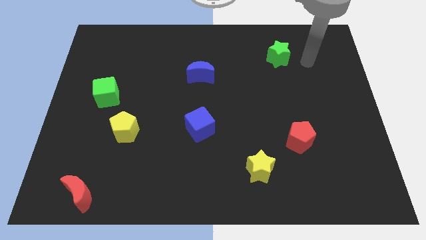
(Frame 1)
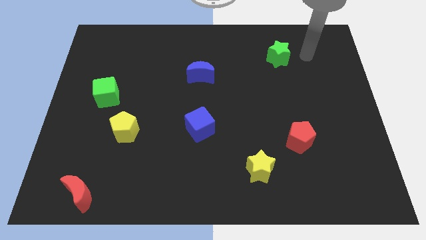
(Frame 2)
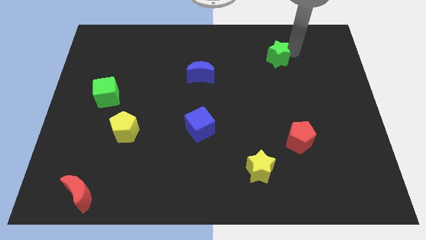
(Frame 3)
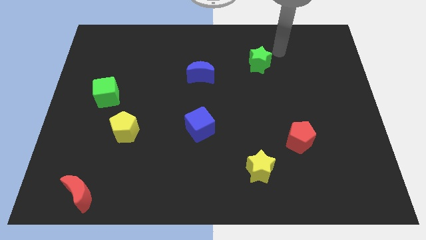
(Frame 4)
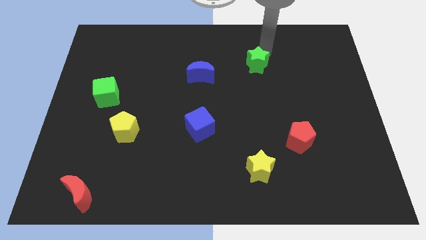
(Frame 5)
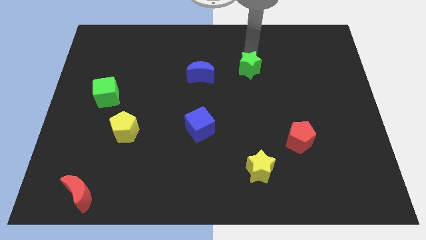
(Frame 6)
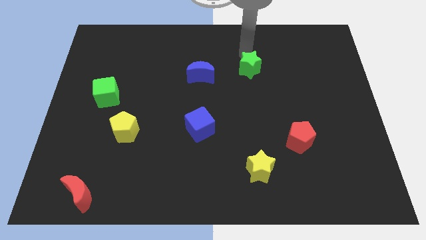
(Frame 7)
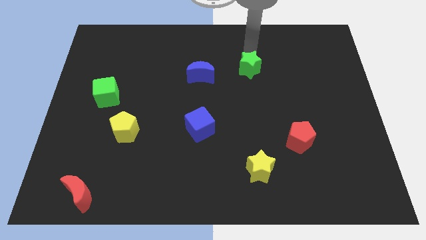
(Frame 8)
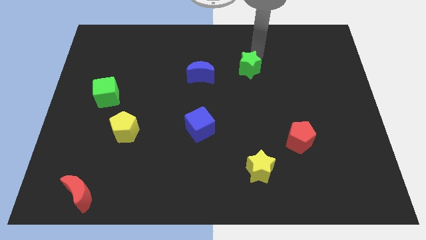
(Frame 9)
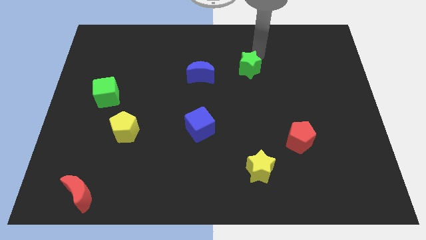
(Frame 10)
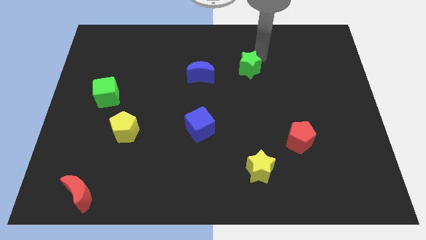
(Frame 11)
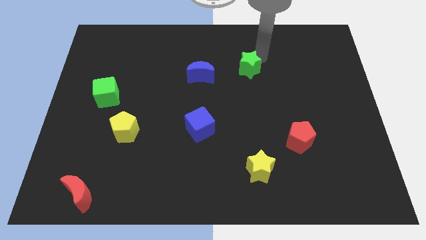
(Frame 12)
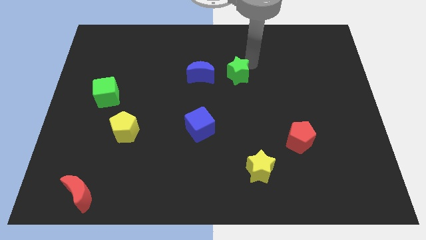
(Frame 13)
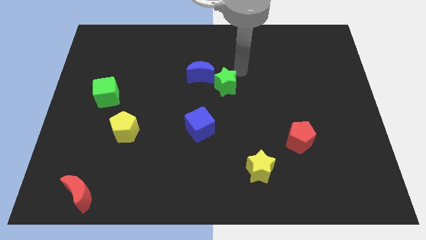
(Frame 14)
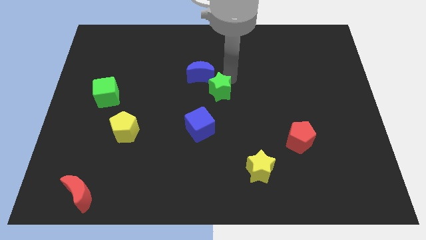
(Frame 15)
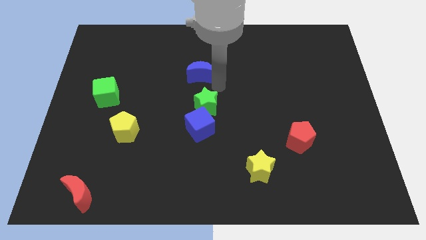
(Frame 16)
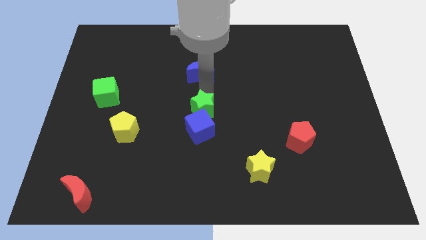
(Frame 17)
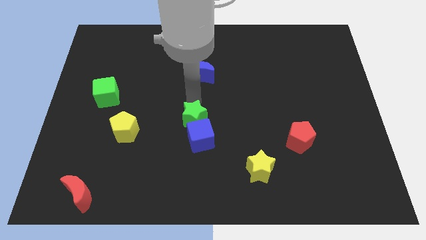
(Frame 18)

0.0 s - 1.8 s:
move green star right beside the blue moon

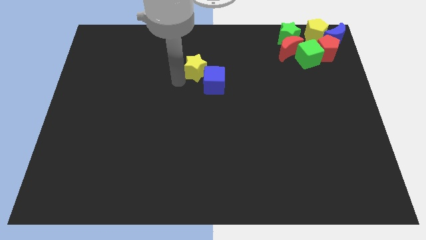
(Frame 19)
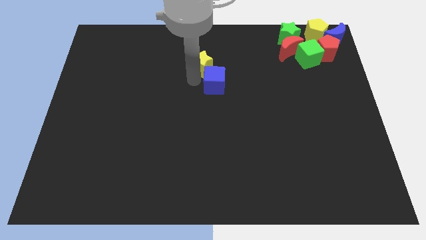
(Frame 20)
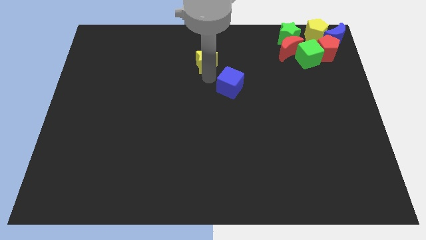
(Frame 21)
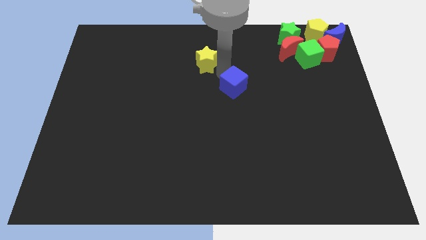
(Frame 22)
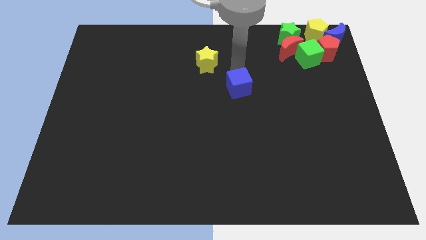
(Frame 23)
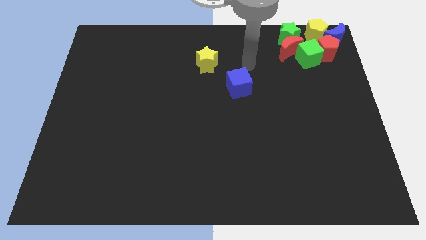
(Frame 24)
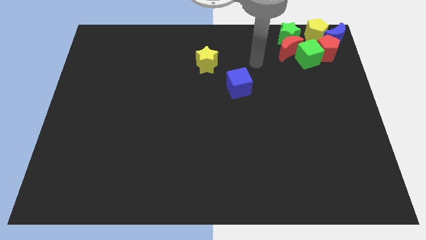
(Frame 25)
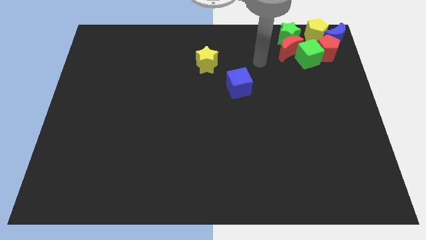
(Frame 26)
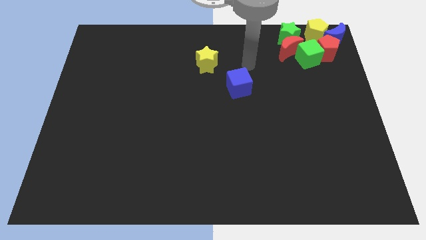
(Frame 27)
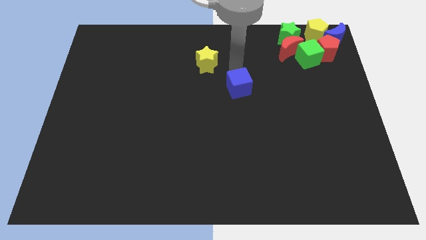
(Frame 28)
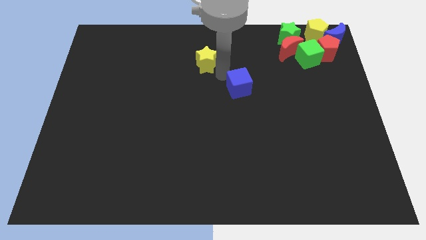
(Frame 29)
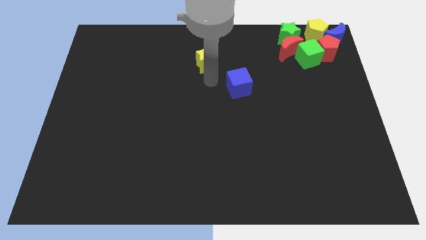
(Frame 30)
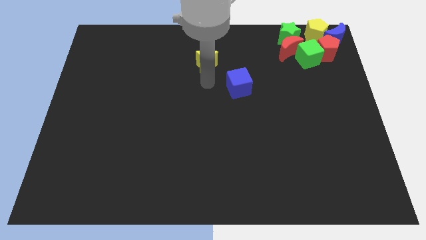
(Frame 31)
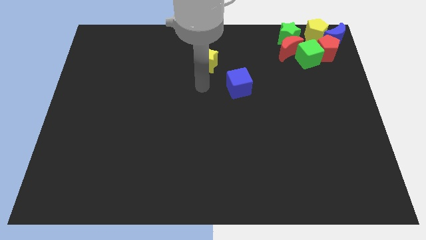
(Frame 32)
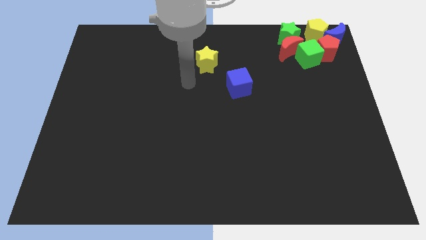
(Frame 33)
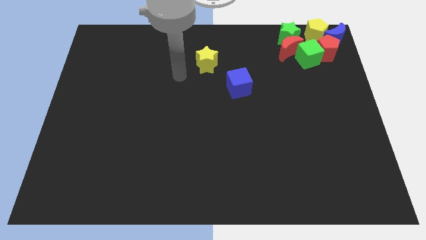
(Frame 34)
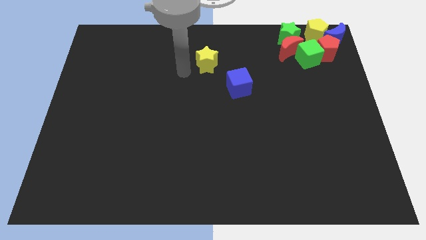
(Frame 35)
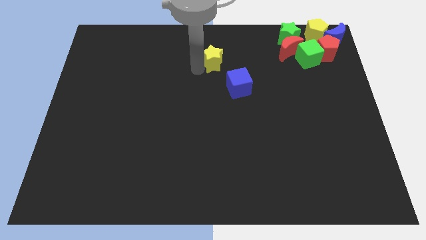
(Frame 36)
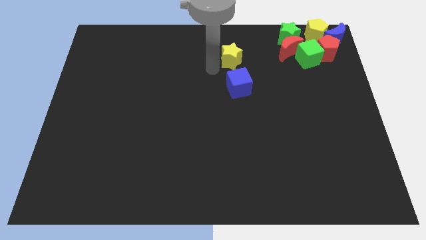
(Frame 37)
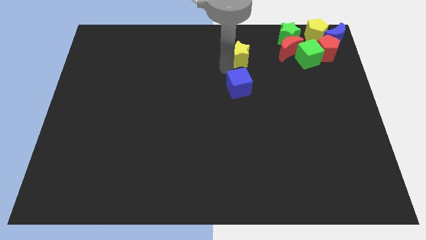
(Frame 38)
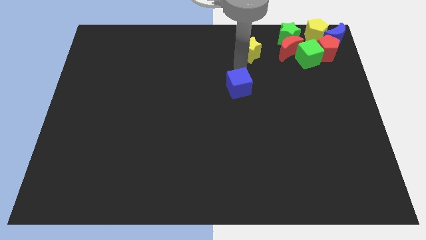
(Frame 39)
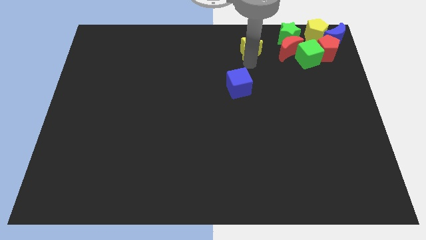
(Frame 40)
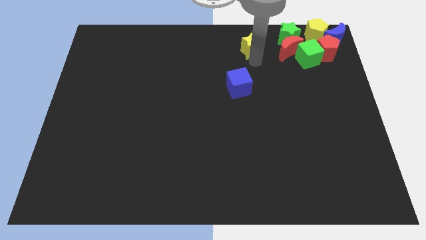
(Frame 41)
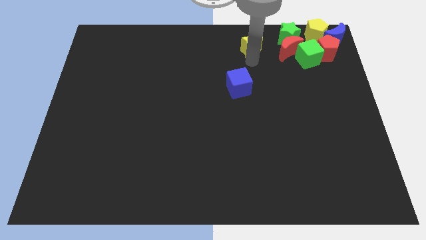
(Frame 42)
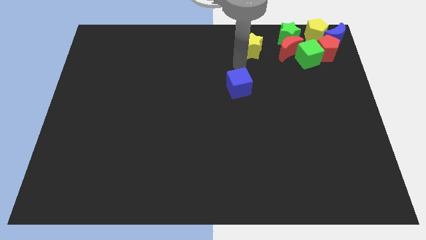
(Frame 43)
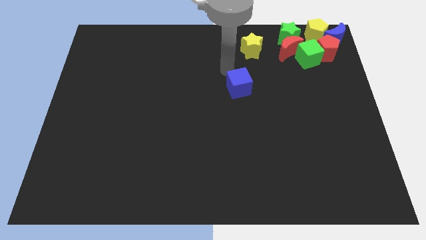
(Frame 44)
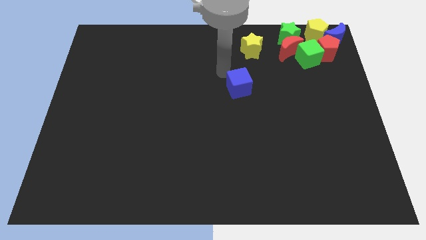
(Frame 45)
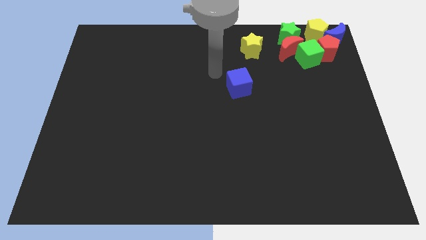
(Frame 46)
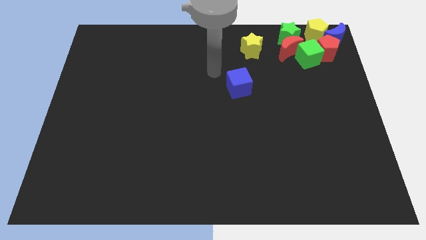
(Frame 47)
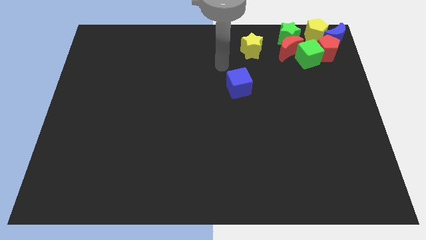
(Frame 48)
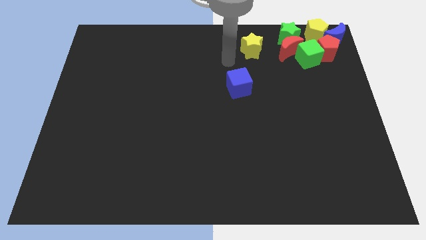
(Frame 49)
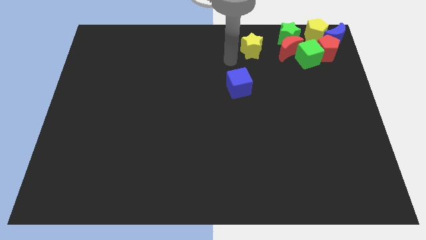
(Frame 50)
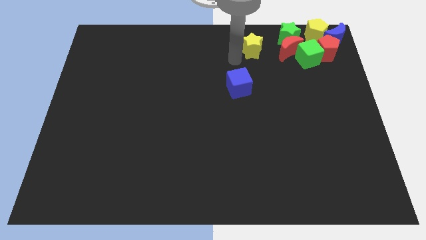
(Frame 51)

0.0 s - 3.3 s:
place the yellow star left to the red moon

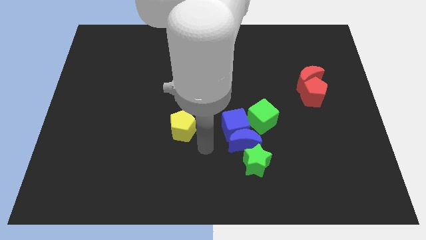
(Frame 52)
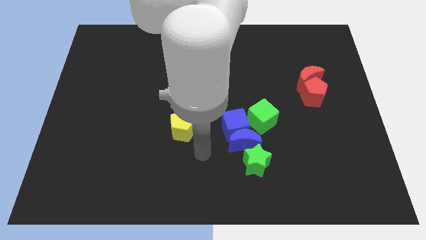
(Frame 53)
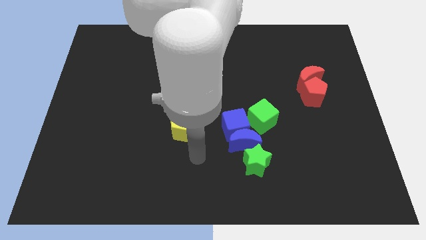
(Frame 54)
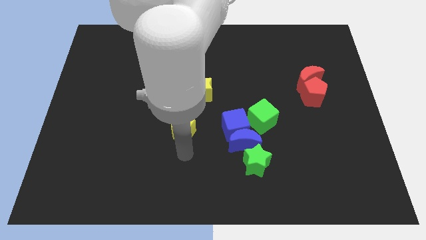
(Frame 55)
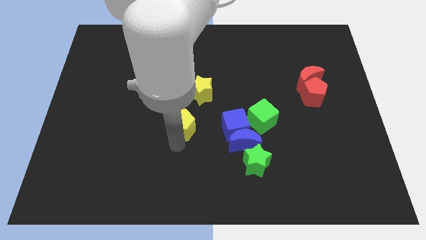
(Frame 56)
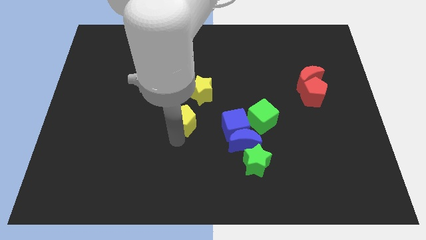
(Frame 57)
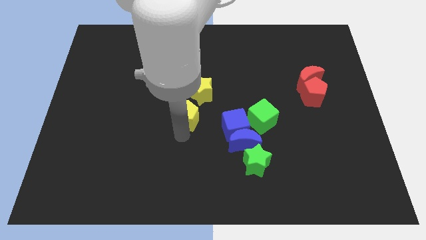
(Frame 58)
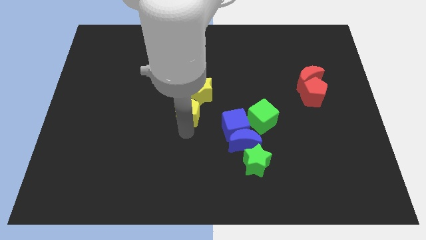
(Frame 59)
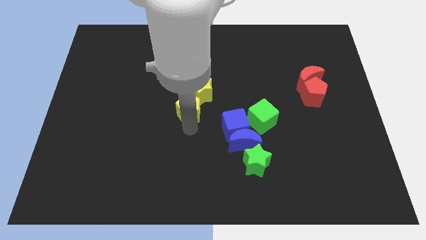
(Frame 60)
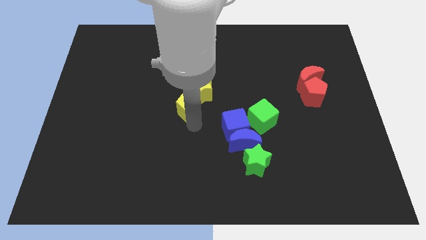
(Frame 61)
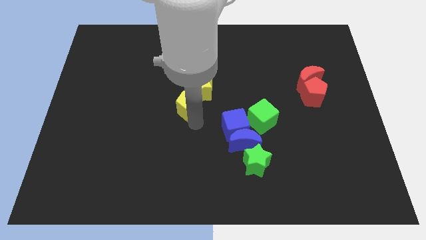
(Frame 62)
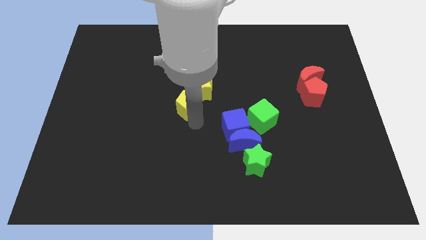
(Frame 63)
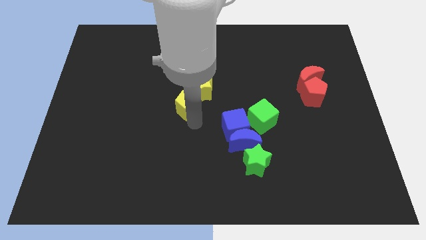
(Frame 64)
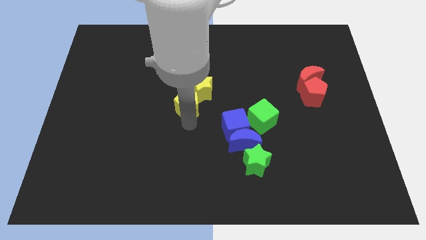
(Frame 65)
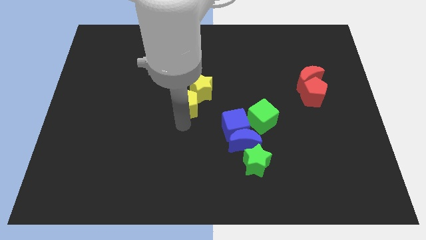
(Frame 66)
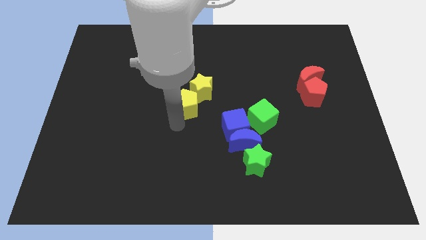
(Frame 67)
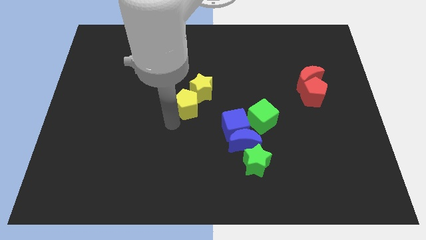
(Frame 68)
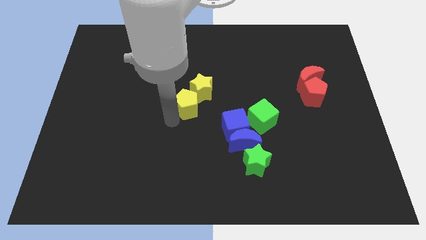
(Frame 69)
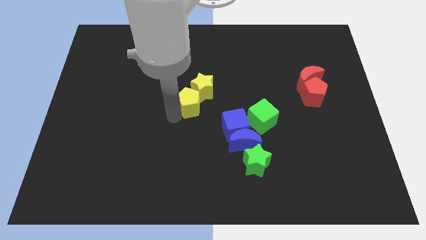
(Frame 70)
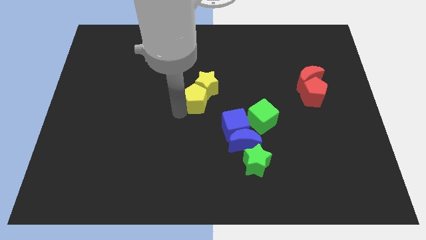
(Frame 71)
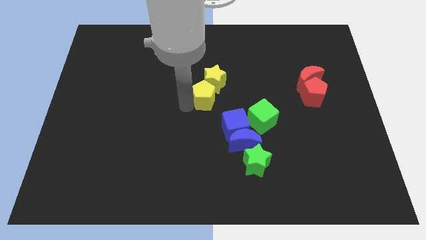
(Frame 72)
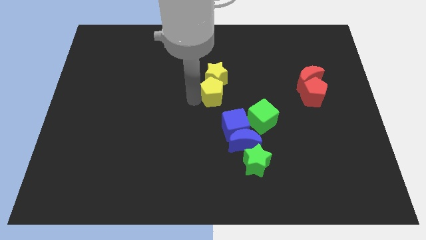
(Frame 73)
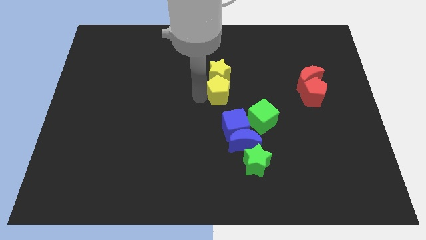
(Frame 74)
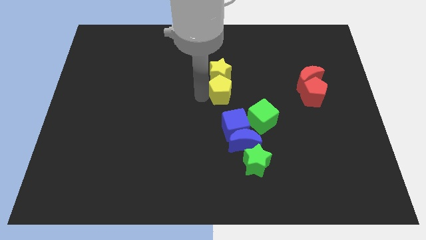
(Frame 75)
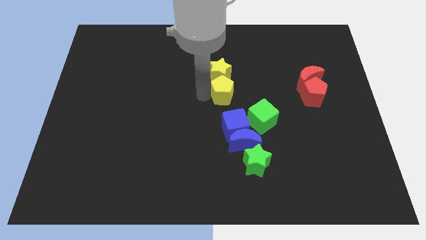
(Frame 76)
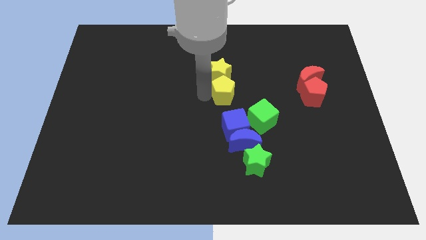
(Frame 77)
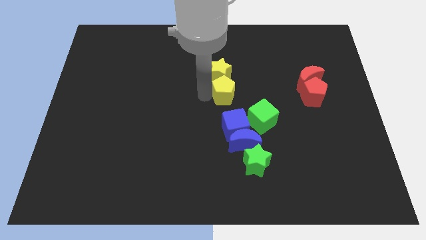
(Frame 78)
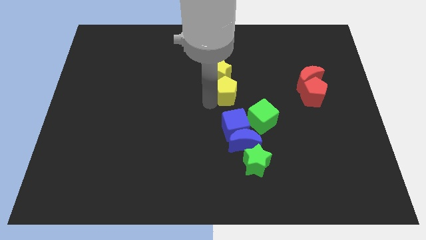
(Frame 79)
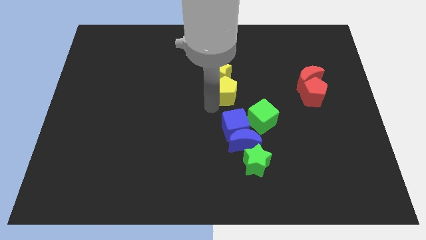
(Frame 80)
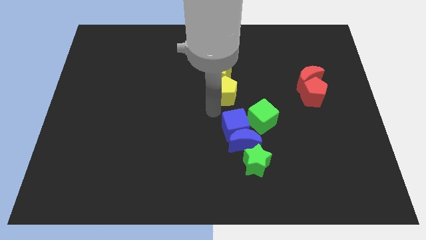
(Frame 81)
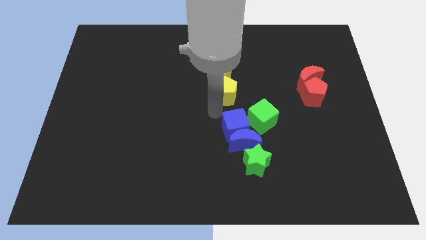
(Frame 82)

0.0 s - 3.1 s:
move the yellow pentagon to the center of the board

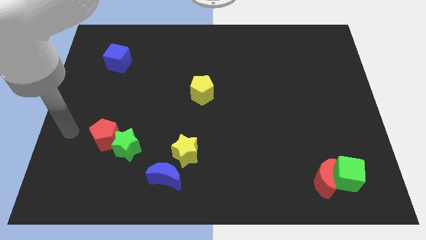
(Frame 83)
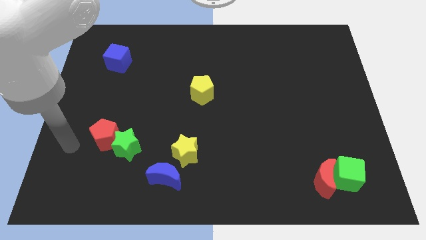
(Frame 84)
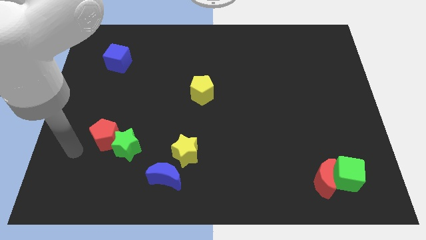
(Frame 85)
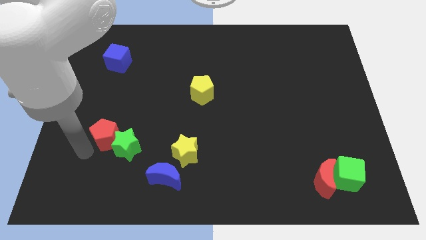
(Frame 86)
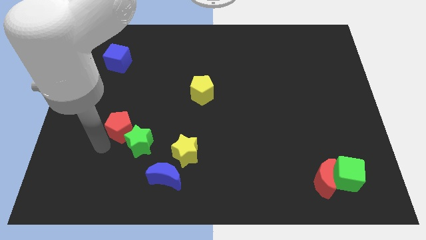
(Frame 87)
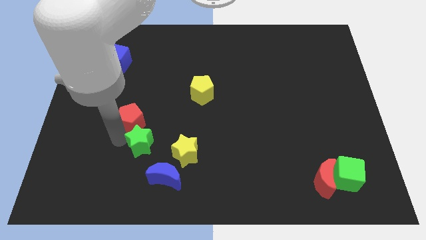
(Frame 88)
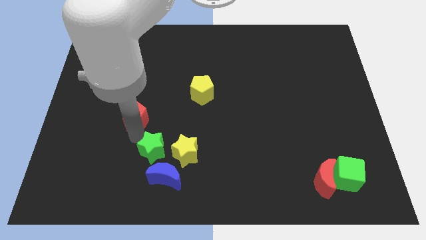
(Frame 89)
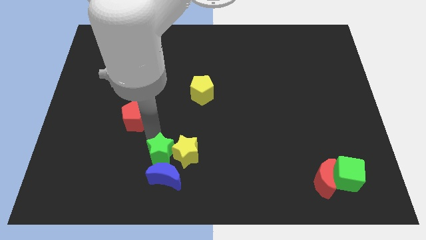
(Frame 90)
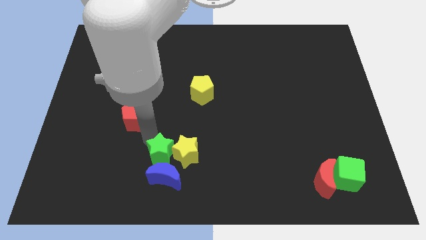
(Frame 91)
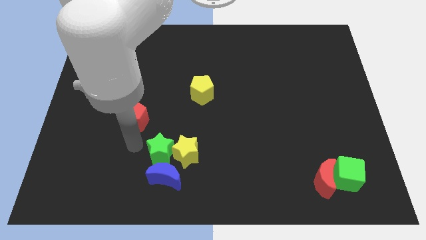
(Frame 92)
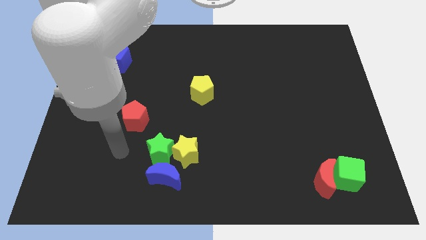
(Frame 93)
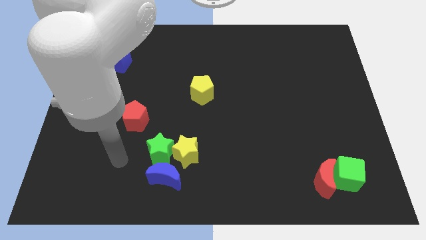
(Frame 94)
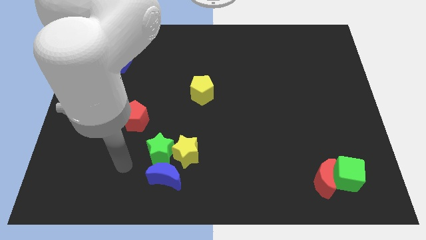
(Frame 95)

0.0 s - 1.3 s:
separate the red pentagon from the green star
